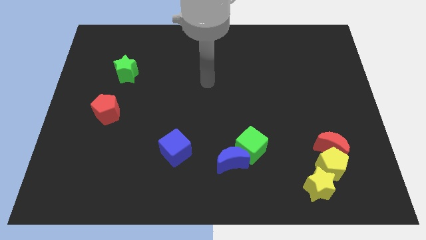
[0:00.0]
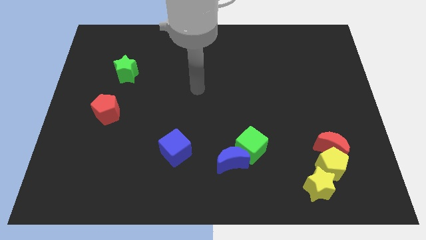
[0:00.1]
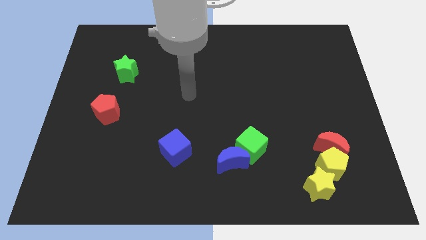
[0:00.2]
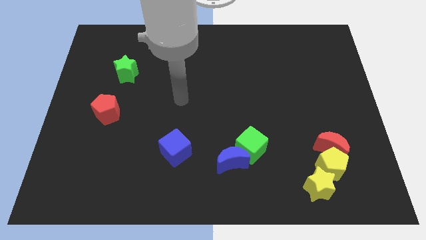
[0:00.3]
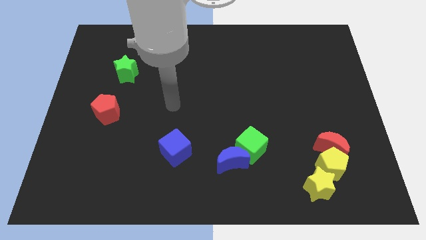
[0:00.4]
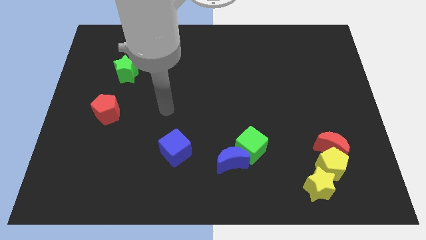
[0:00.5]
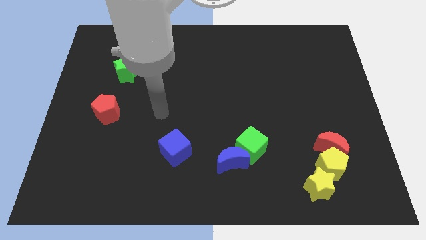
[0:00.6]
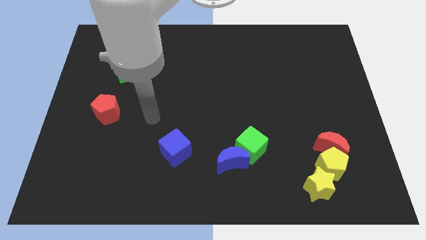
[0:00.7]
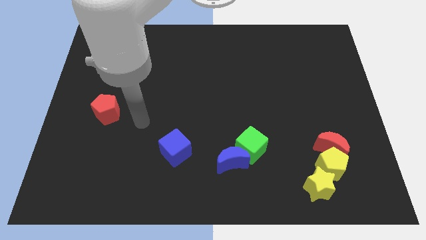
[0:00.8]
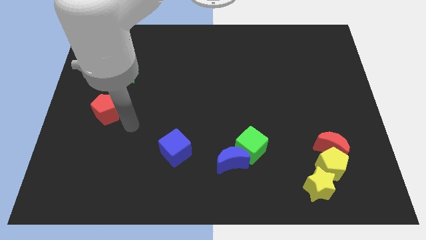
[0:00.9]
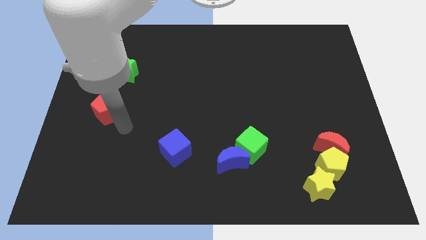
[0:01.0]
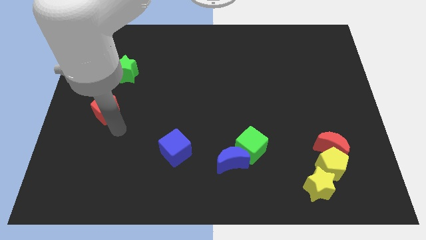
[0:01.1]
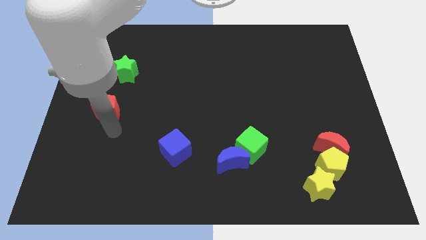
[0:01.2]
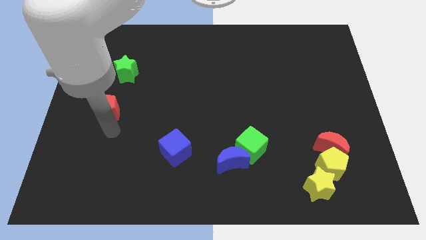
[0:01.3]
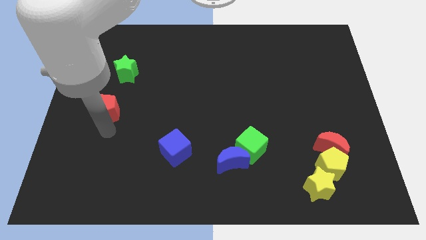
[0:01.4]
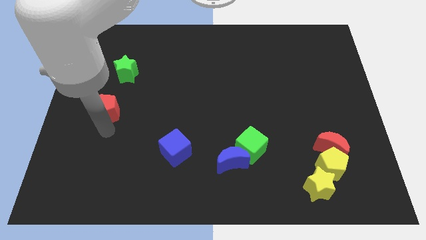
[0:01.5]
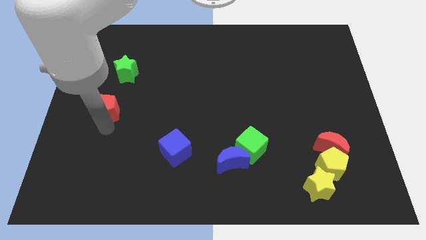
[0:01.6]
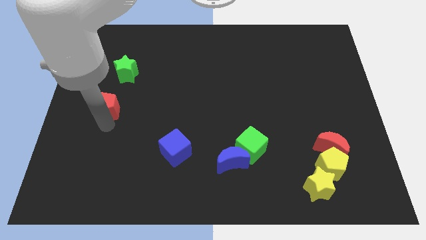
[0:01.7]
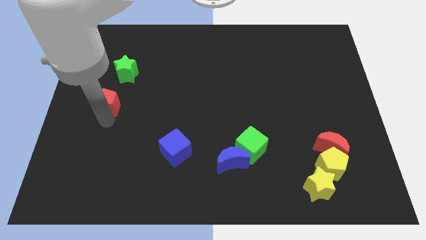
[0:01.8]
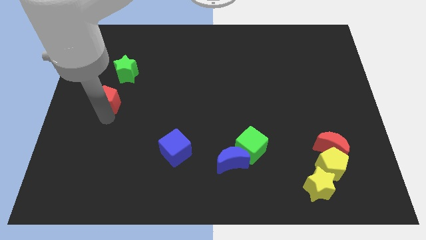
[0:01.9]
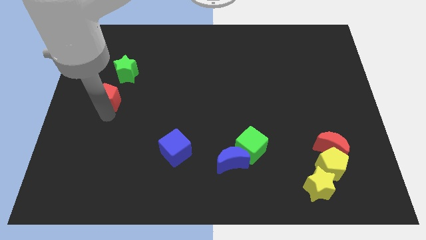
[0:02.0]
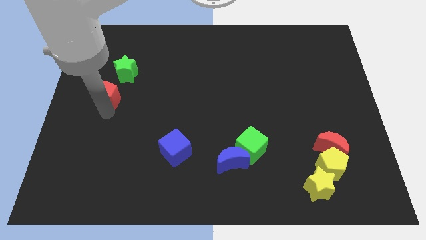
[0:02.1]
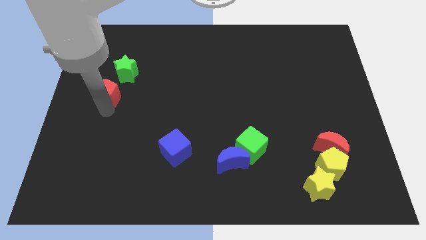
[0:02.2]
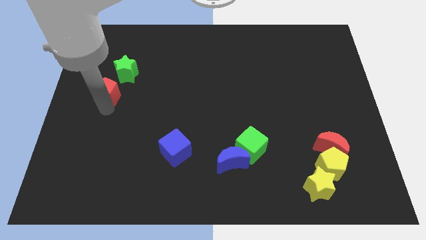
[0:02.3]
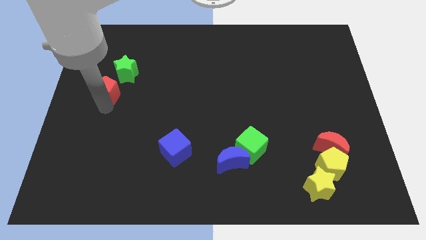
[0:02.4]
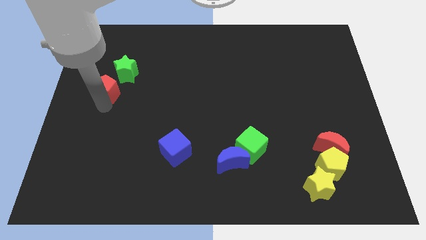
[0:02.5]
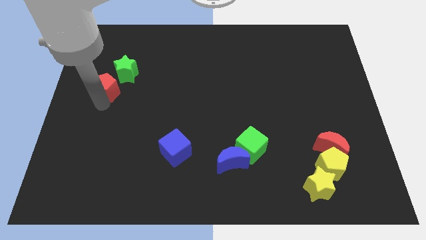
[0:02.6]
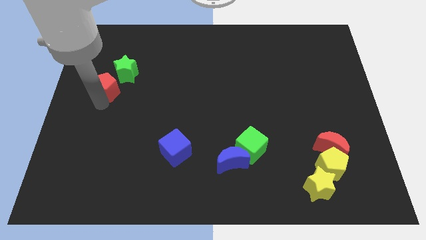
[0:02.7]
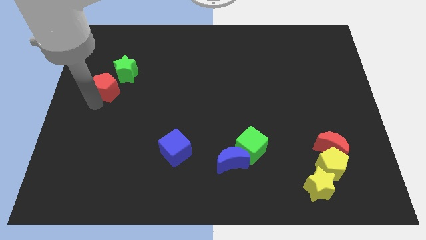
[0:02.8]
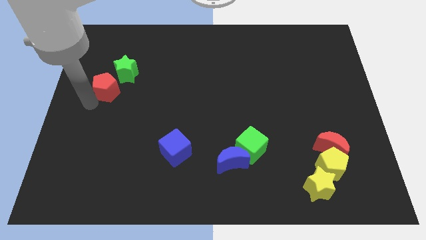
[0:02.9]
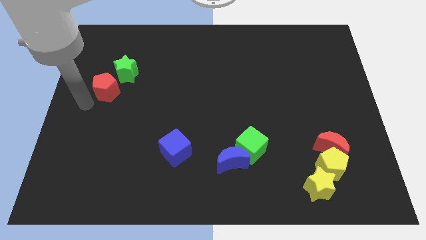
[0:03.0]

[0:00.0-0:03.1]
move the red pentagon close to the green star

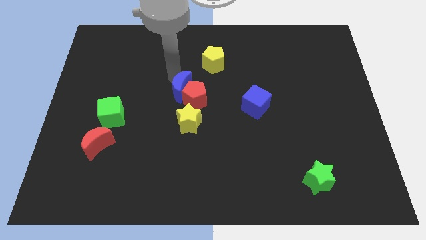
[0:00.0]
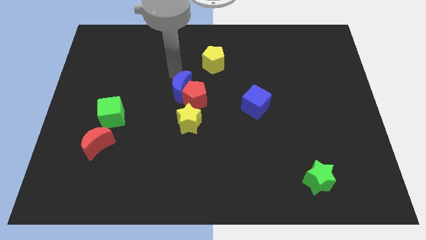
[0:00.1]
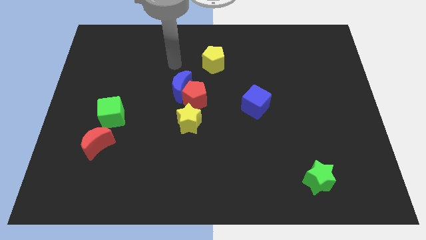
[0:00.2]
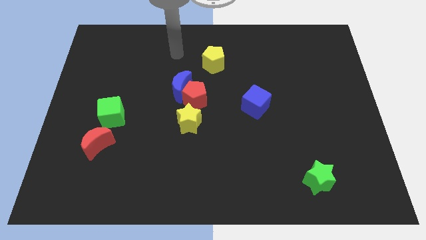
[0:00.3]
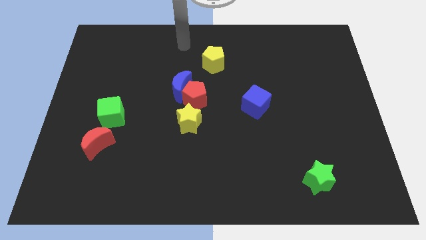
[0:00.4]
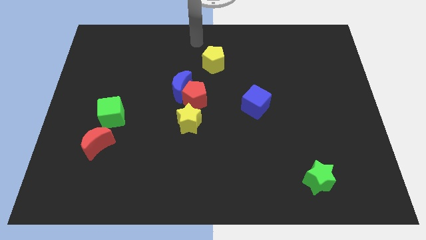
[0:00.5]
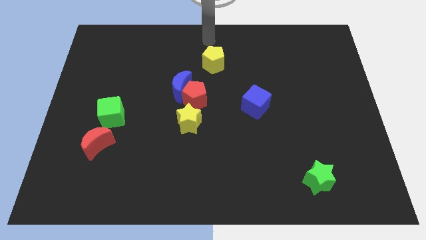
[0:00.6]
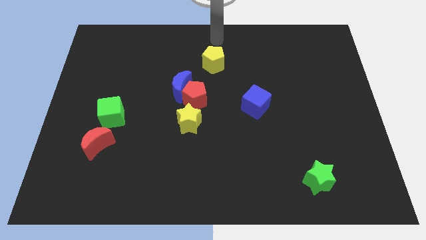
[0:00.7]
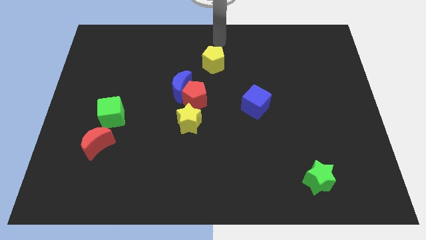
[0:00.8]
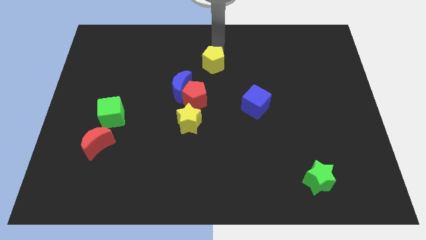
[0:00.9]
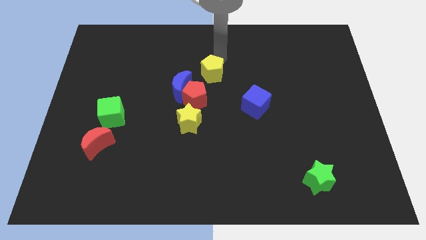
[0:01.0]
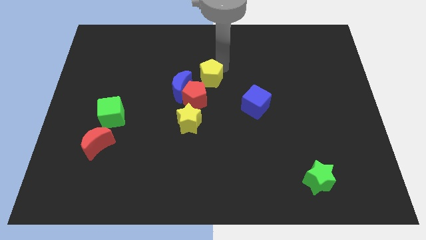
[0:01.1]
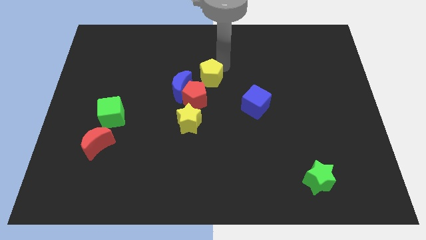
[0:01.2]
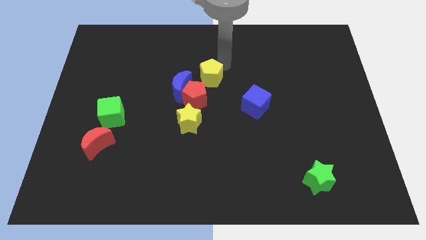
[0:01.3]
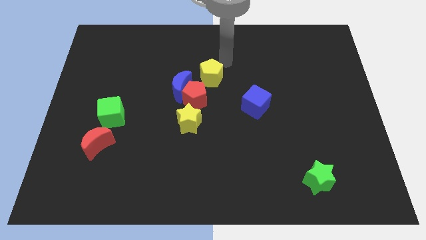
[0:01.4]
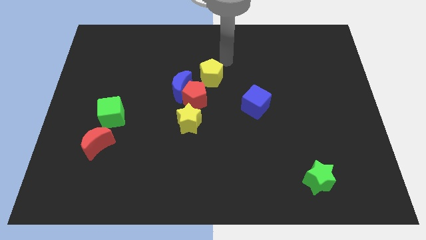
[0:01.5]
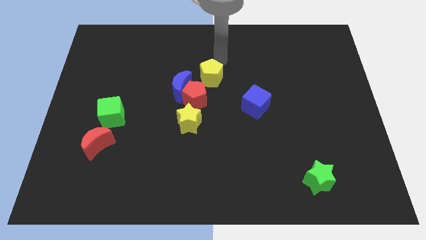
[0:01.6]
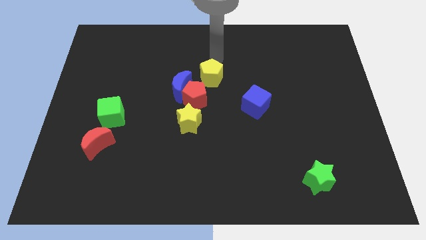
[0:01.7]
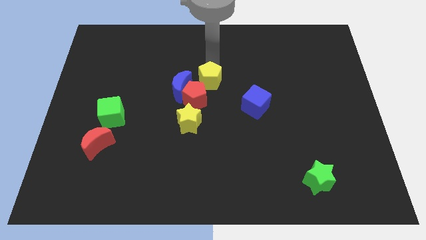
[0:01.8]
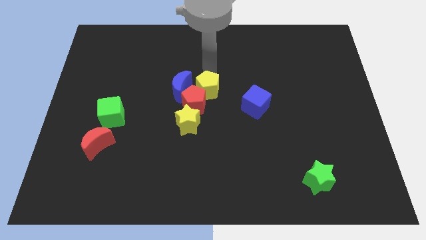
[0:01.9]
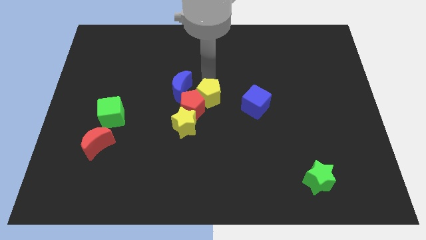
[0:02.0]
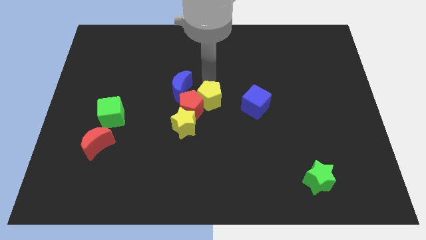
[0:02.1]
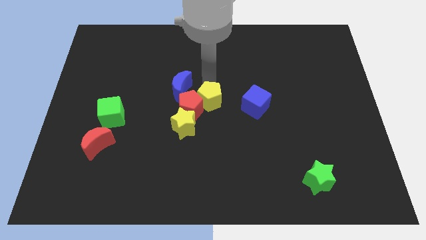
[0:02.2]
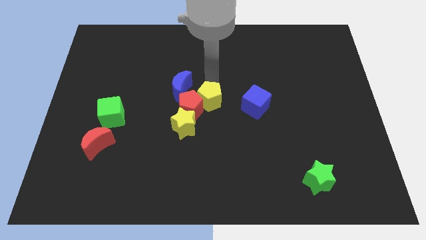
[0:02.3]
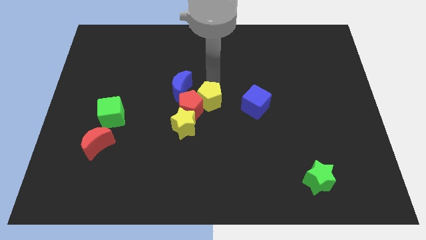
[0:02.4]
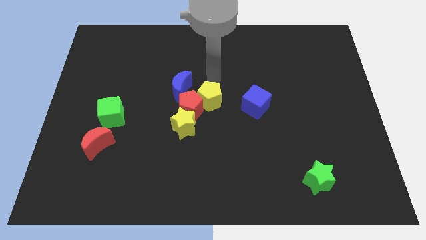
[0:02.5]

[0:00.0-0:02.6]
push the yellow pentagon into the red pentagon

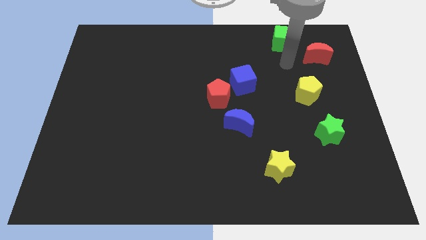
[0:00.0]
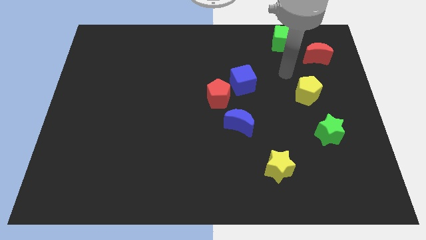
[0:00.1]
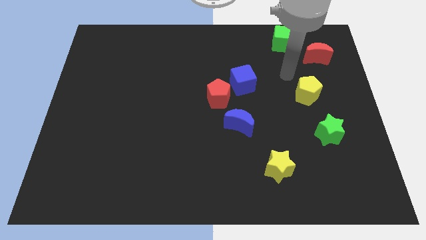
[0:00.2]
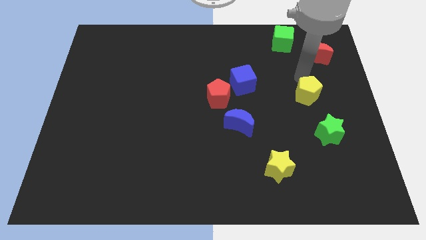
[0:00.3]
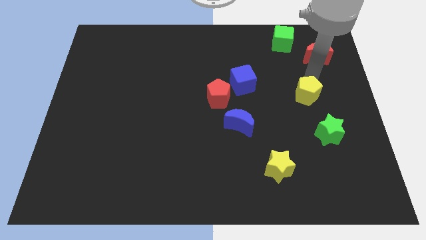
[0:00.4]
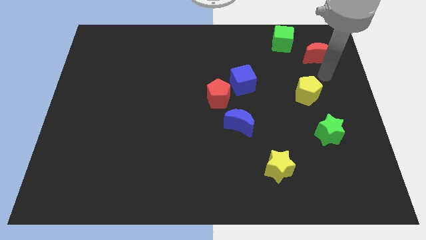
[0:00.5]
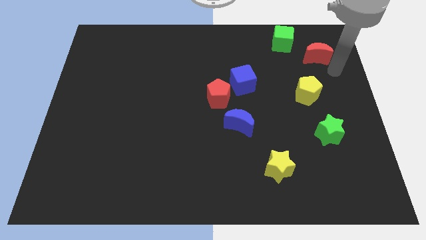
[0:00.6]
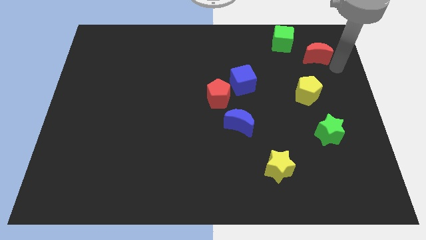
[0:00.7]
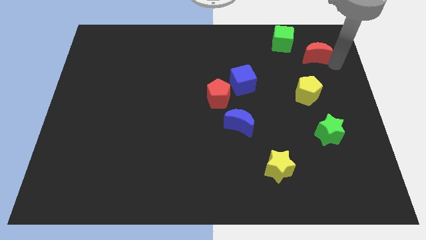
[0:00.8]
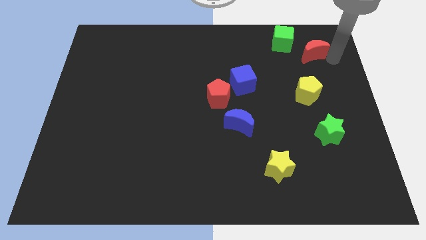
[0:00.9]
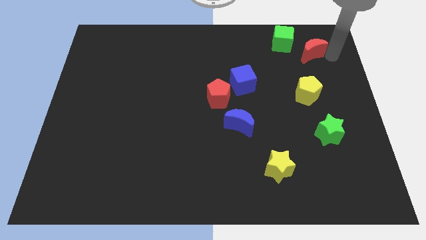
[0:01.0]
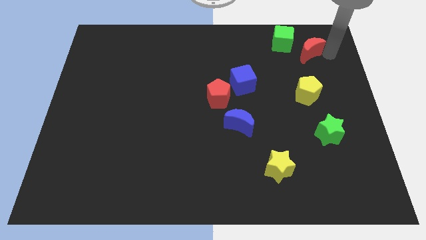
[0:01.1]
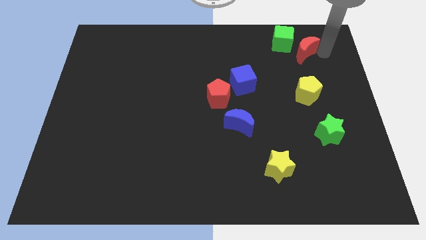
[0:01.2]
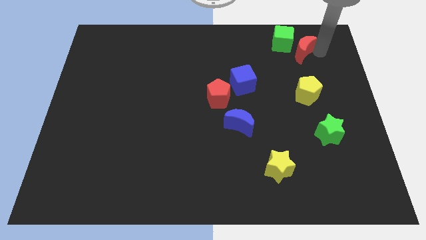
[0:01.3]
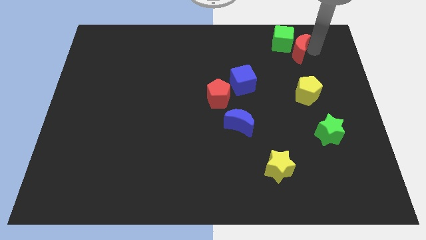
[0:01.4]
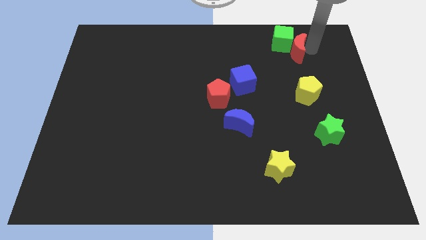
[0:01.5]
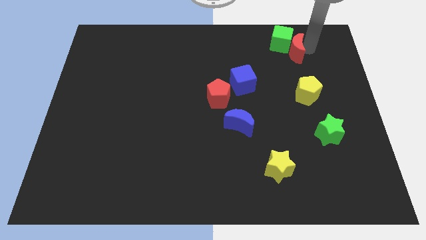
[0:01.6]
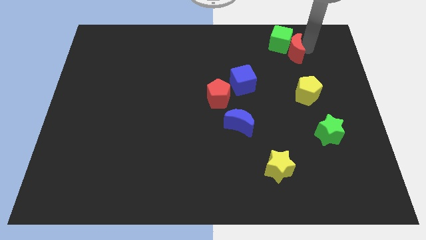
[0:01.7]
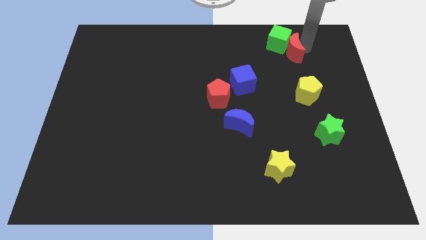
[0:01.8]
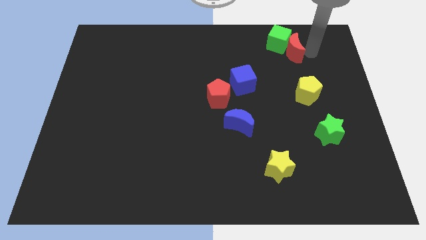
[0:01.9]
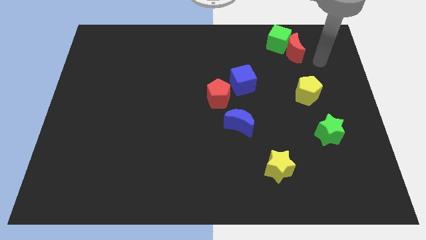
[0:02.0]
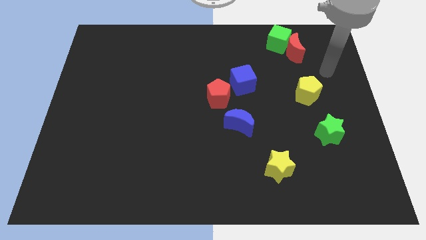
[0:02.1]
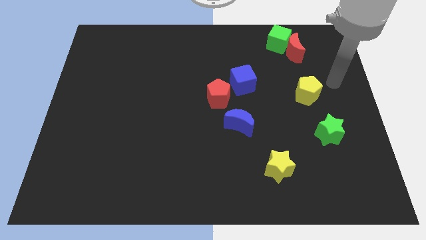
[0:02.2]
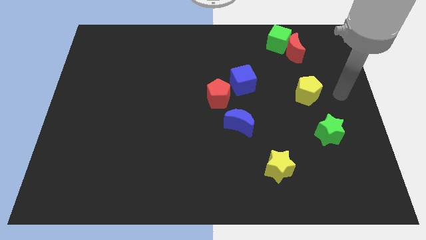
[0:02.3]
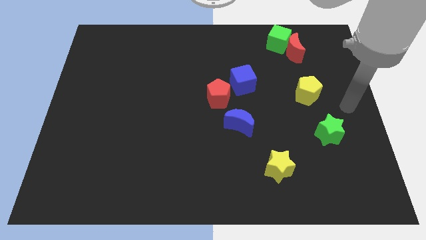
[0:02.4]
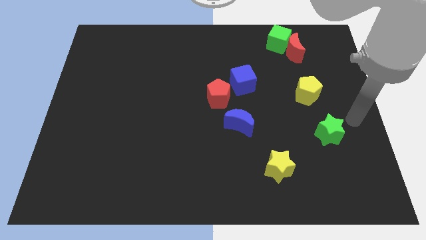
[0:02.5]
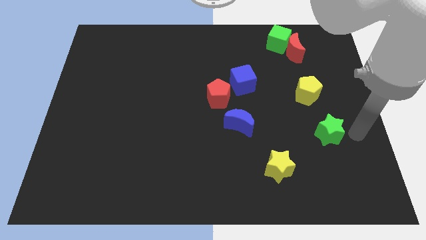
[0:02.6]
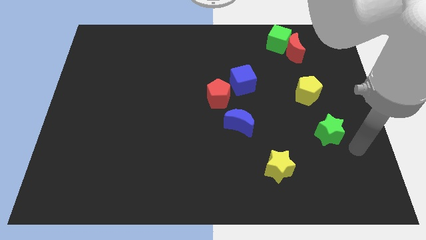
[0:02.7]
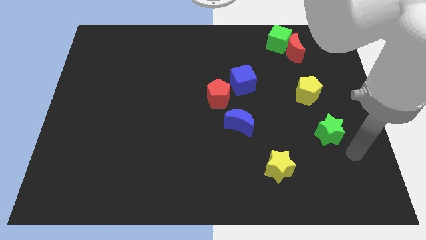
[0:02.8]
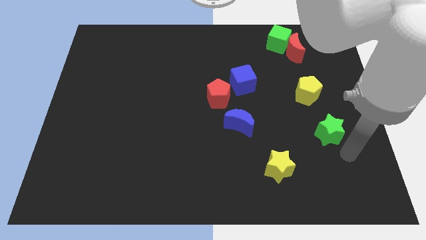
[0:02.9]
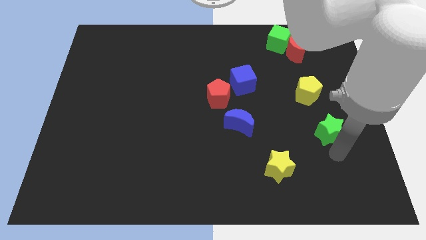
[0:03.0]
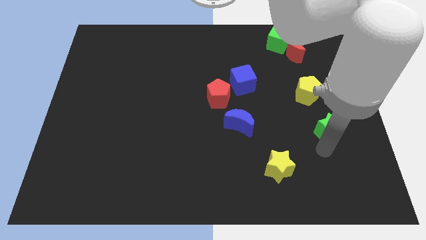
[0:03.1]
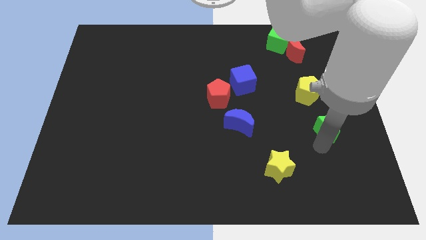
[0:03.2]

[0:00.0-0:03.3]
move the red crescent to the right side of the green cube
